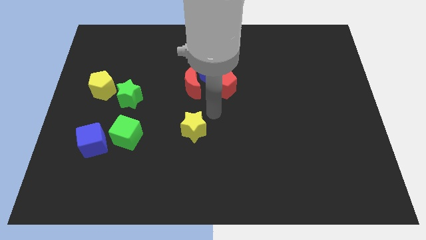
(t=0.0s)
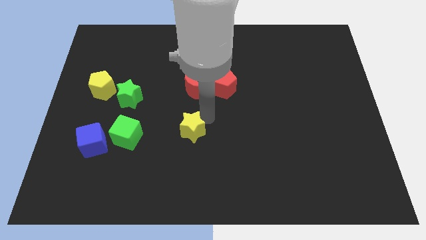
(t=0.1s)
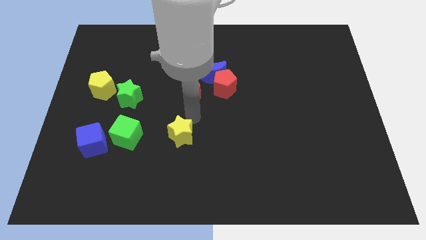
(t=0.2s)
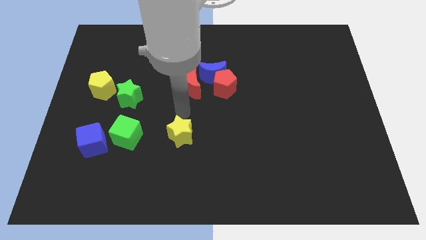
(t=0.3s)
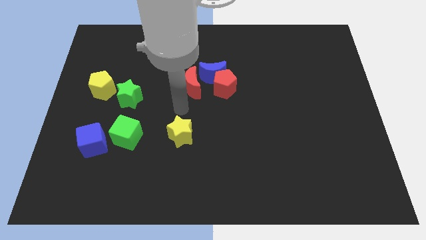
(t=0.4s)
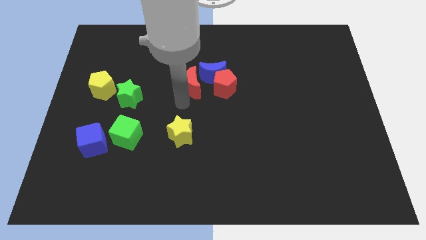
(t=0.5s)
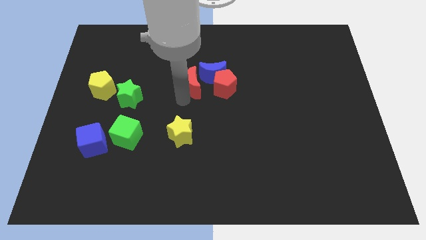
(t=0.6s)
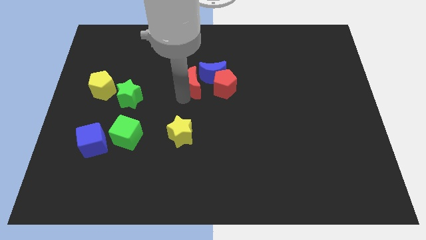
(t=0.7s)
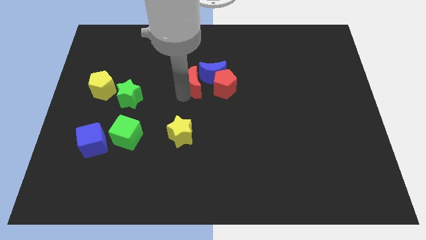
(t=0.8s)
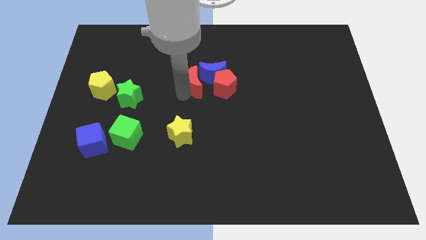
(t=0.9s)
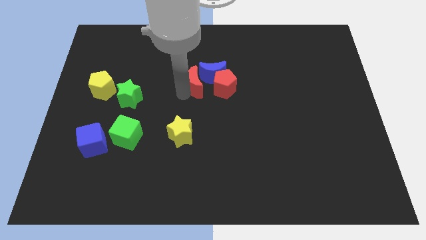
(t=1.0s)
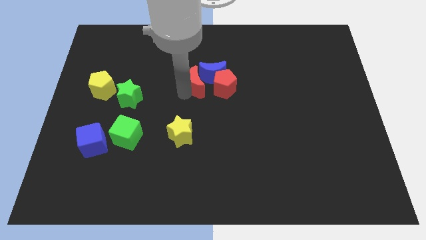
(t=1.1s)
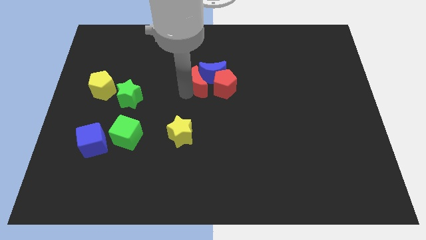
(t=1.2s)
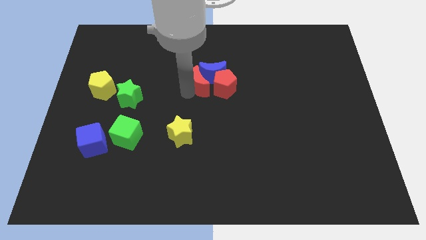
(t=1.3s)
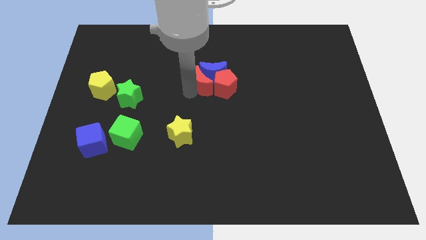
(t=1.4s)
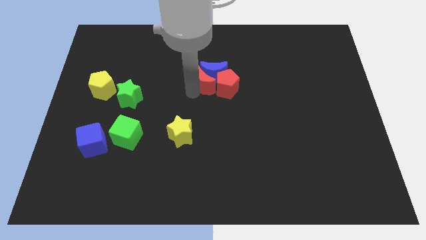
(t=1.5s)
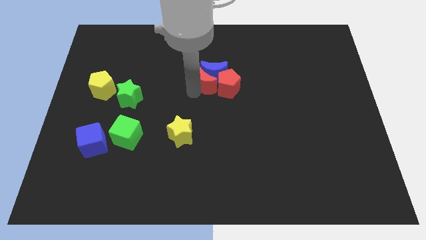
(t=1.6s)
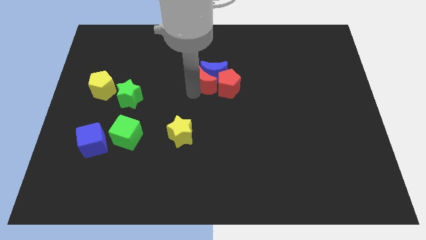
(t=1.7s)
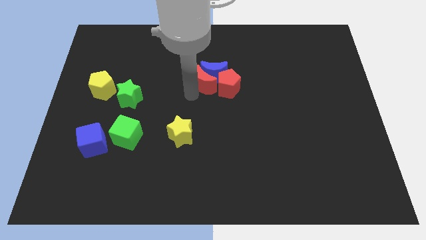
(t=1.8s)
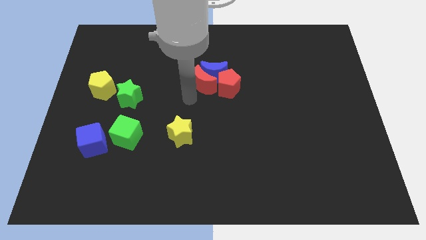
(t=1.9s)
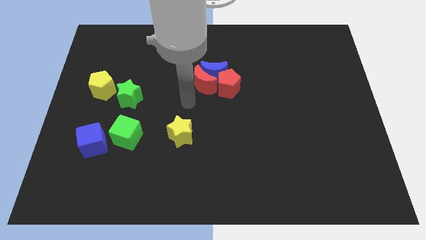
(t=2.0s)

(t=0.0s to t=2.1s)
move the red moon slide to the blue moon

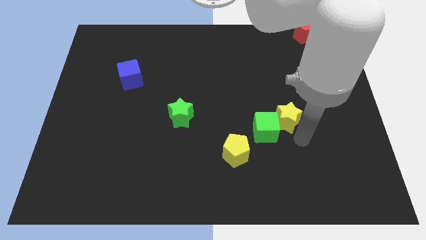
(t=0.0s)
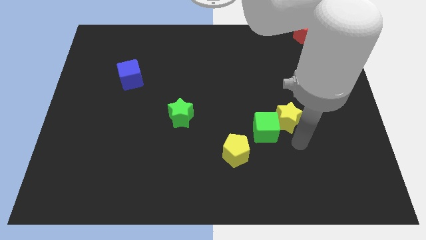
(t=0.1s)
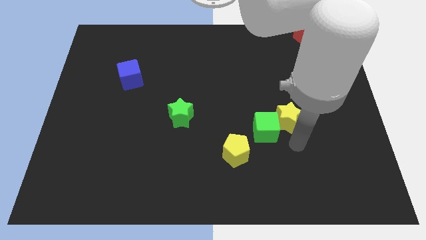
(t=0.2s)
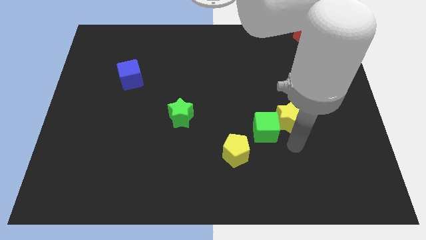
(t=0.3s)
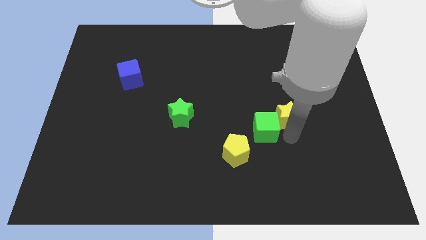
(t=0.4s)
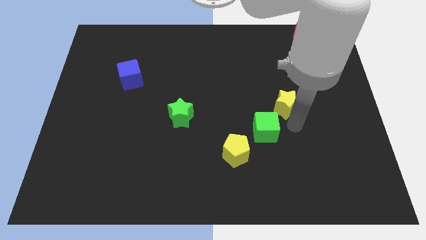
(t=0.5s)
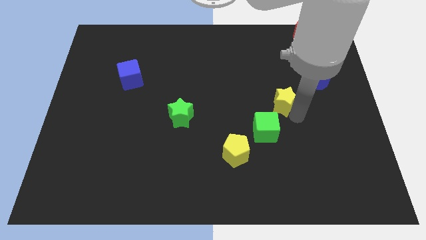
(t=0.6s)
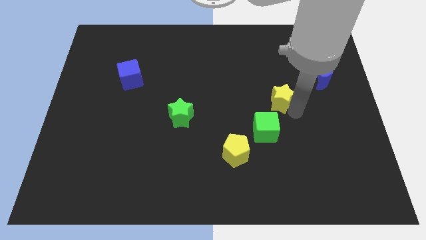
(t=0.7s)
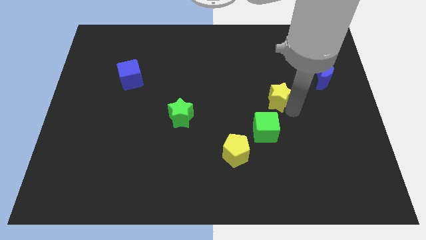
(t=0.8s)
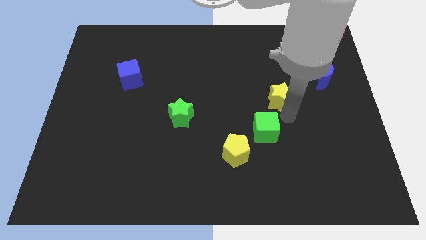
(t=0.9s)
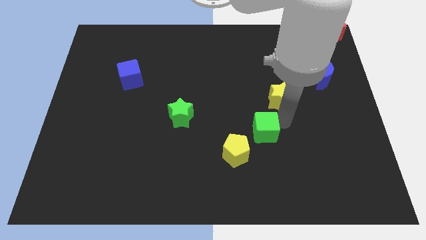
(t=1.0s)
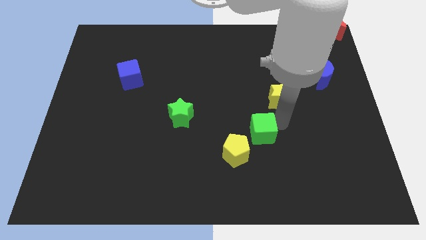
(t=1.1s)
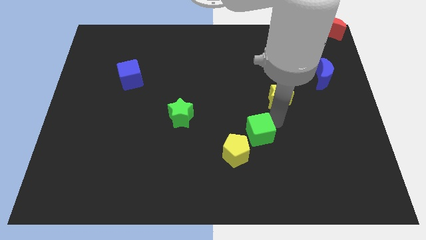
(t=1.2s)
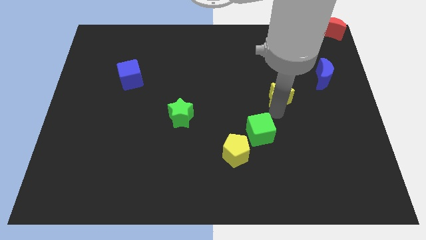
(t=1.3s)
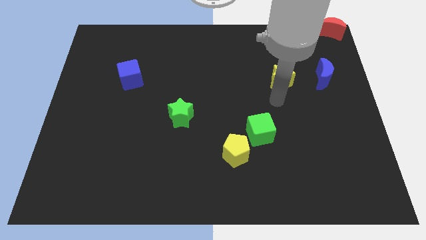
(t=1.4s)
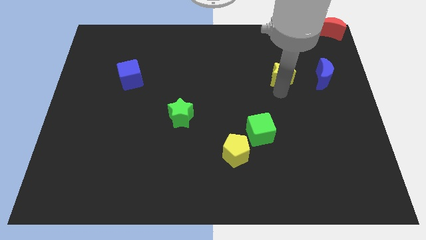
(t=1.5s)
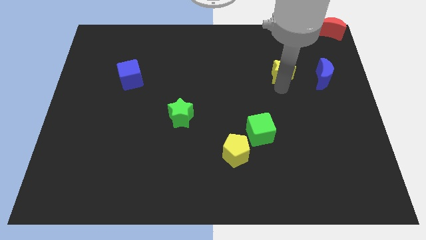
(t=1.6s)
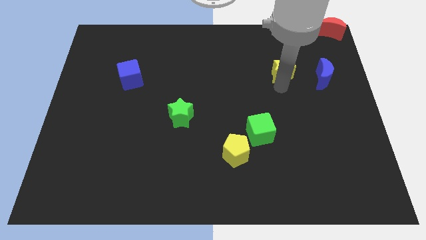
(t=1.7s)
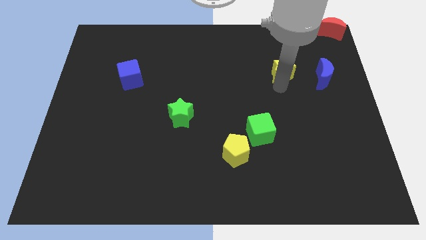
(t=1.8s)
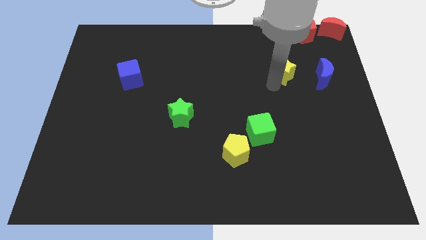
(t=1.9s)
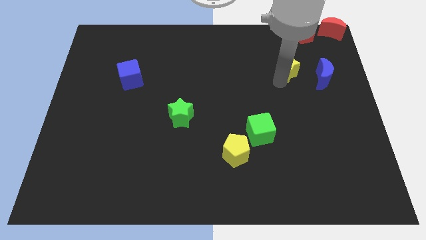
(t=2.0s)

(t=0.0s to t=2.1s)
separate yellow star from green cube

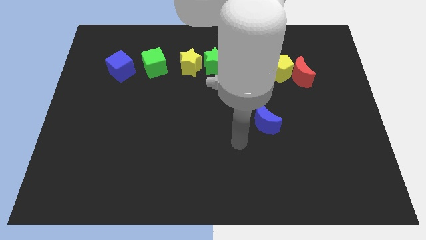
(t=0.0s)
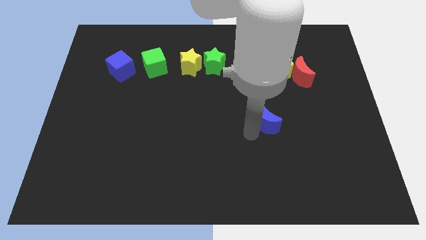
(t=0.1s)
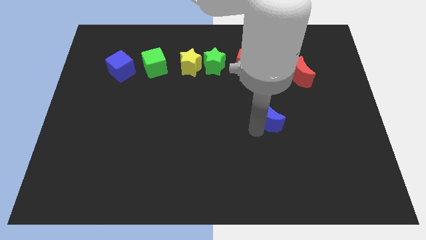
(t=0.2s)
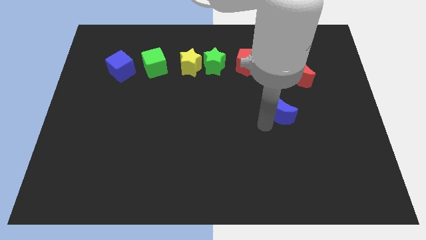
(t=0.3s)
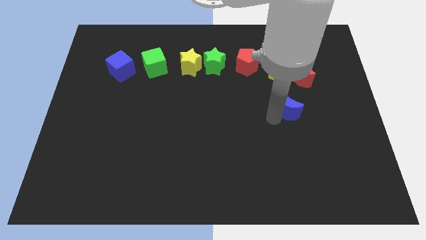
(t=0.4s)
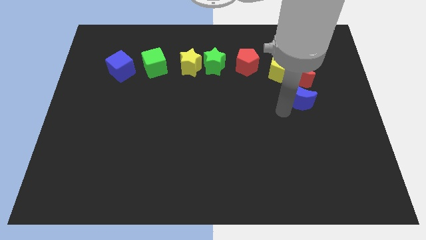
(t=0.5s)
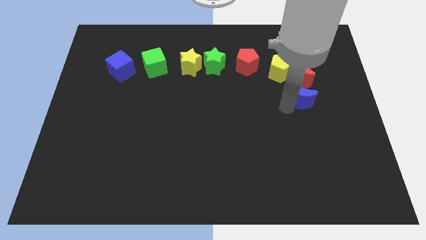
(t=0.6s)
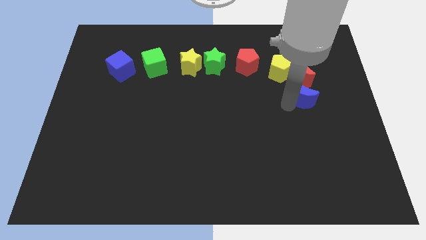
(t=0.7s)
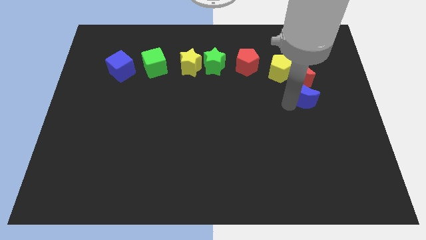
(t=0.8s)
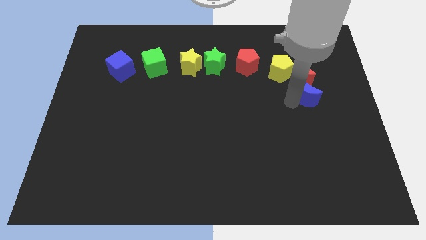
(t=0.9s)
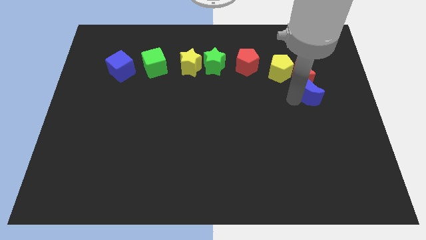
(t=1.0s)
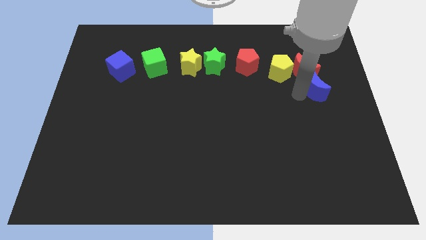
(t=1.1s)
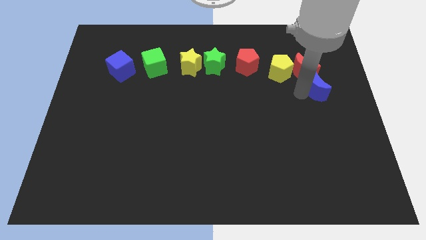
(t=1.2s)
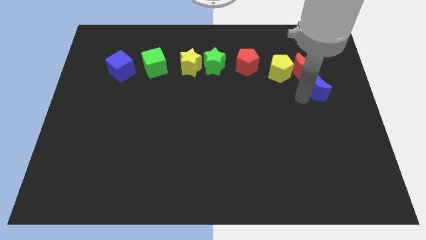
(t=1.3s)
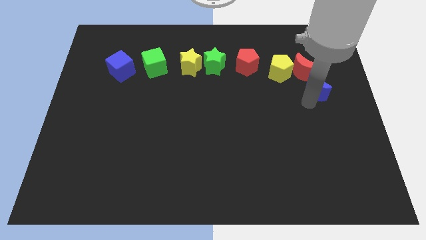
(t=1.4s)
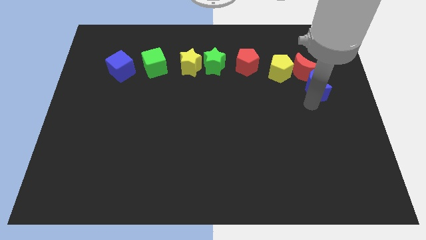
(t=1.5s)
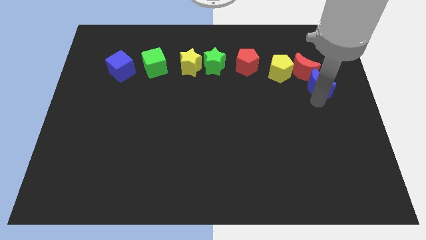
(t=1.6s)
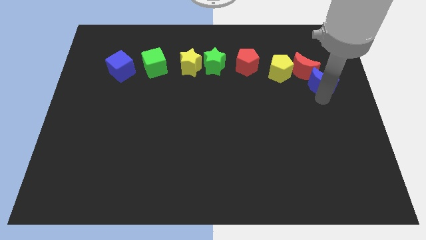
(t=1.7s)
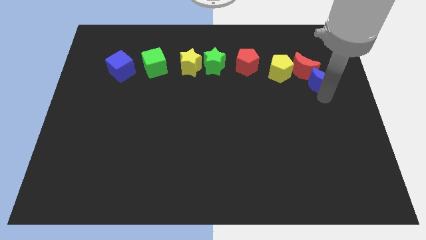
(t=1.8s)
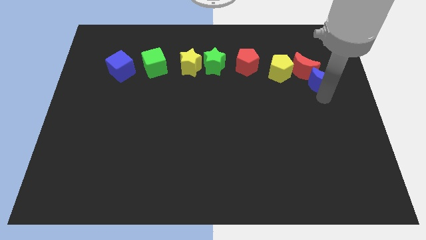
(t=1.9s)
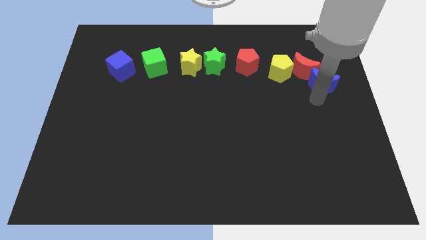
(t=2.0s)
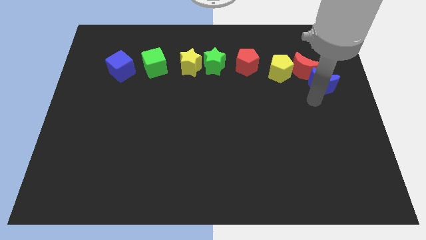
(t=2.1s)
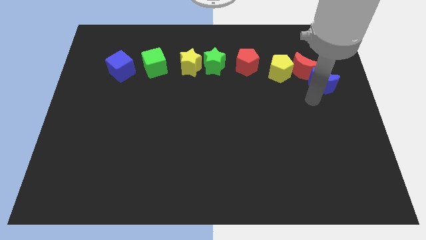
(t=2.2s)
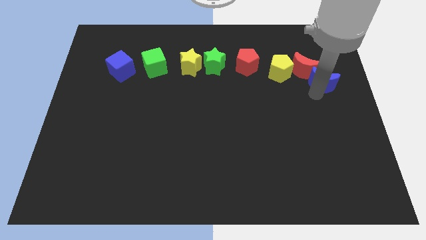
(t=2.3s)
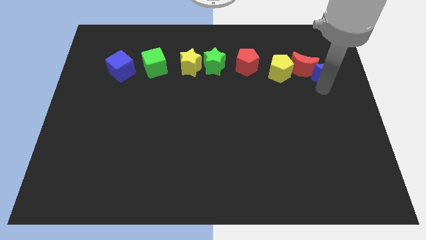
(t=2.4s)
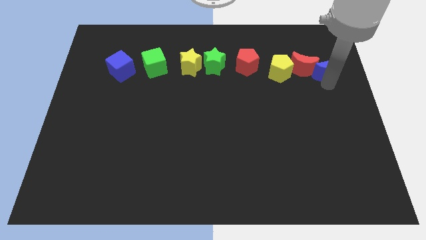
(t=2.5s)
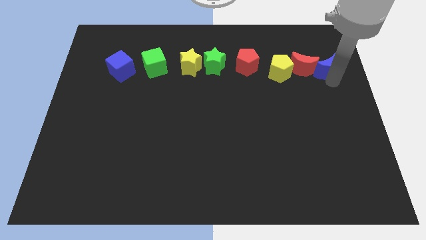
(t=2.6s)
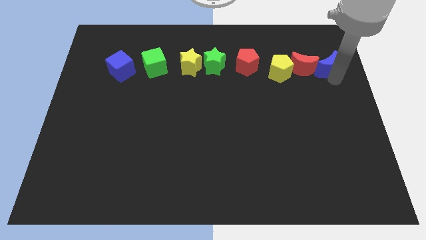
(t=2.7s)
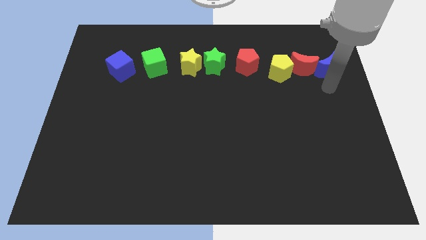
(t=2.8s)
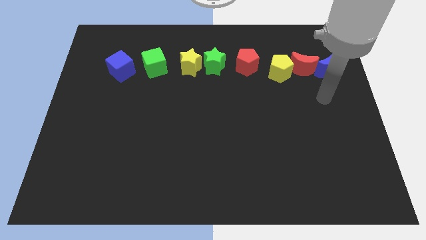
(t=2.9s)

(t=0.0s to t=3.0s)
slide the blue moon to the right of red moon

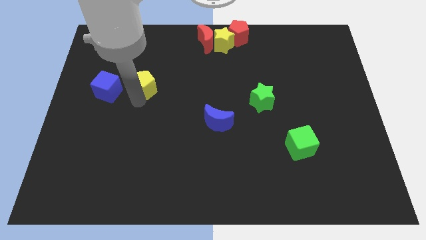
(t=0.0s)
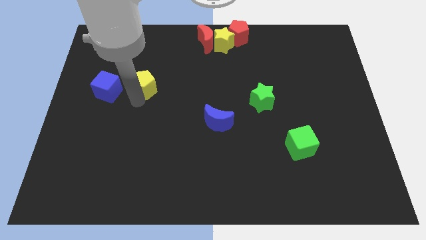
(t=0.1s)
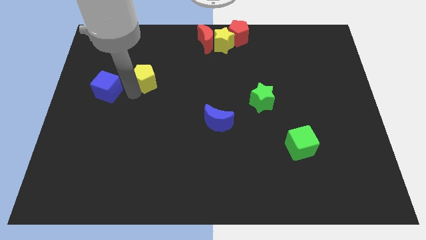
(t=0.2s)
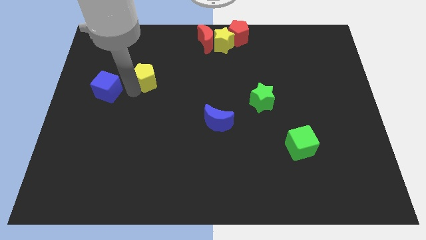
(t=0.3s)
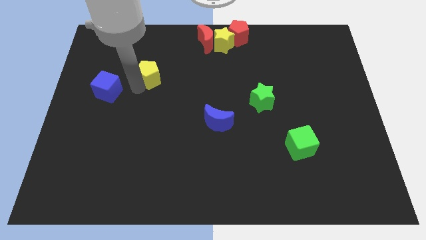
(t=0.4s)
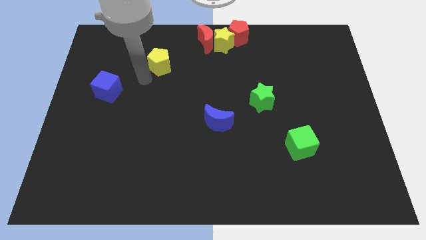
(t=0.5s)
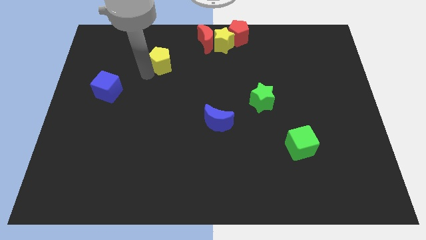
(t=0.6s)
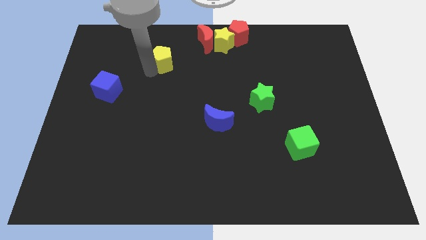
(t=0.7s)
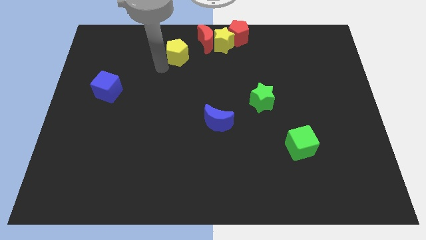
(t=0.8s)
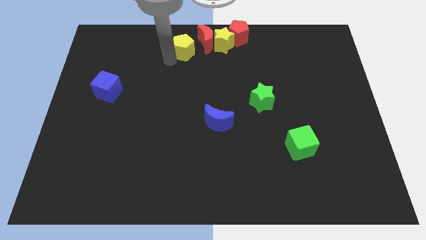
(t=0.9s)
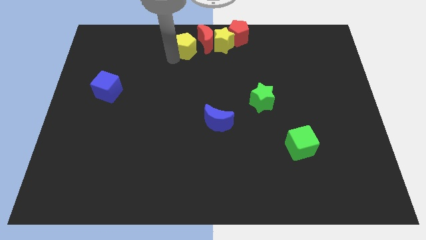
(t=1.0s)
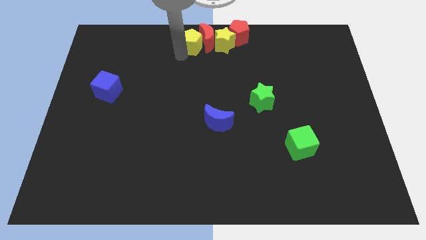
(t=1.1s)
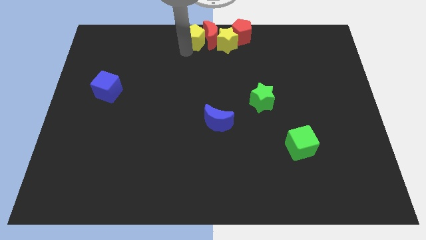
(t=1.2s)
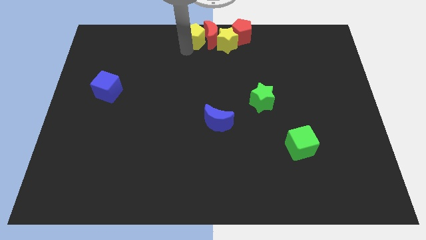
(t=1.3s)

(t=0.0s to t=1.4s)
push the yellow pentagon into the red crescent

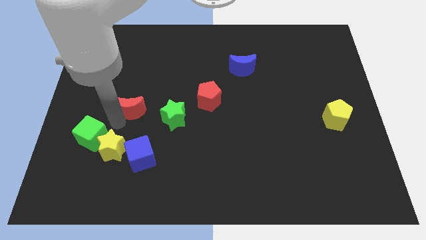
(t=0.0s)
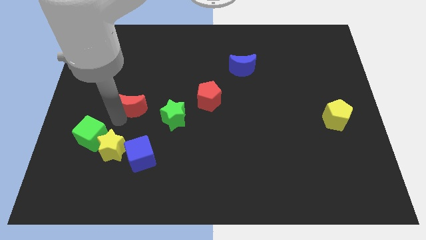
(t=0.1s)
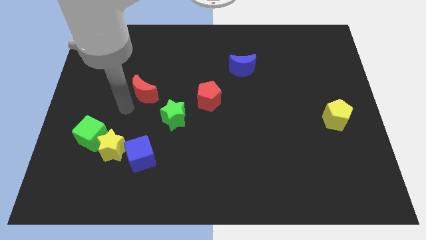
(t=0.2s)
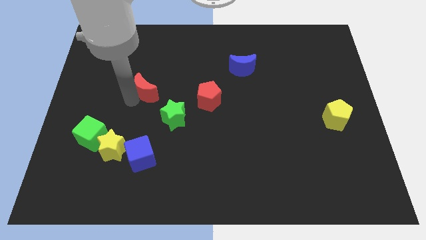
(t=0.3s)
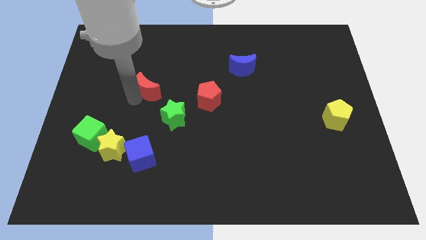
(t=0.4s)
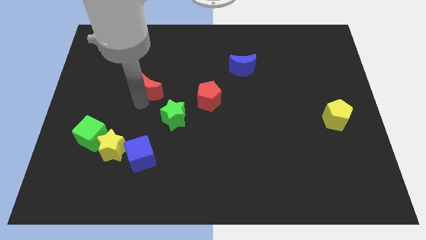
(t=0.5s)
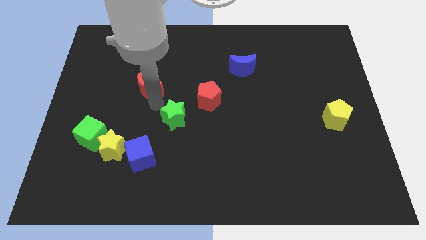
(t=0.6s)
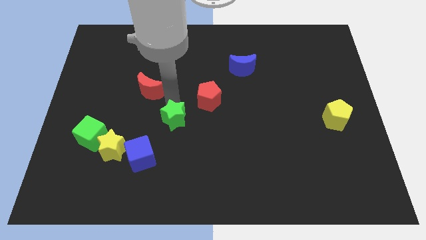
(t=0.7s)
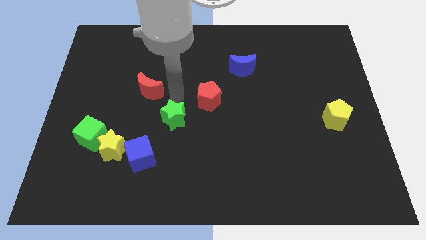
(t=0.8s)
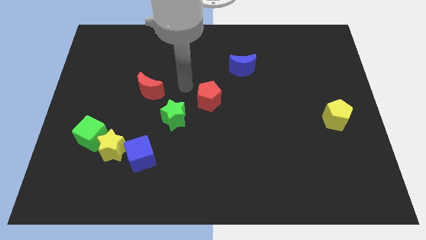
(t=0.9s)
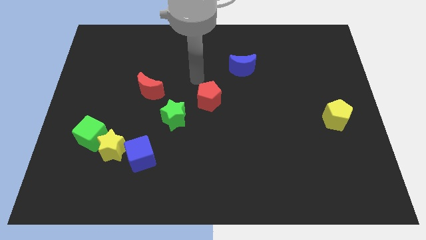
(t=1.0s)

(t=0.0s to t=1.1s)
move the red crescent diagnol to the green star
